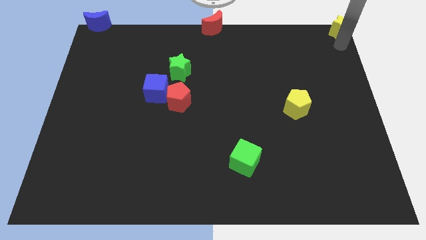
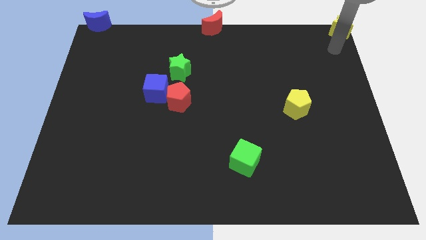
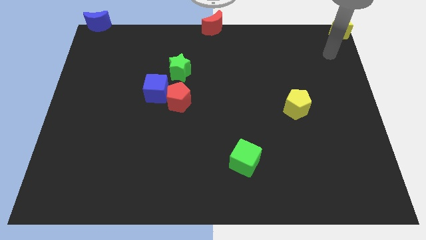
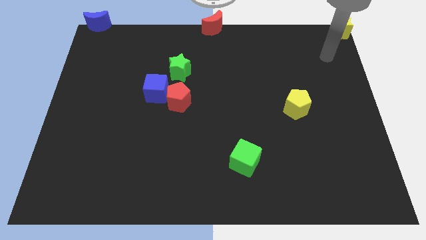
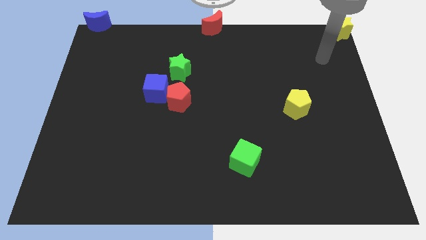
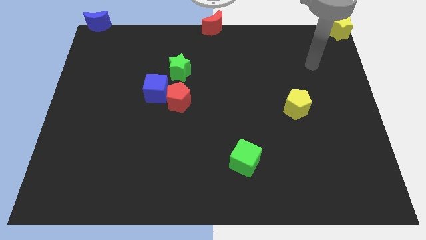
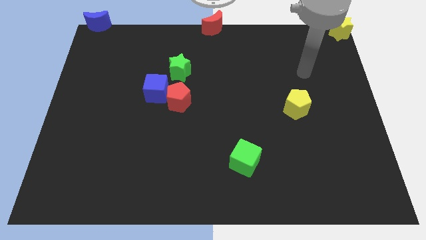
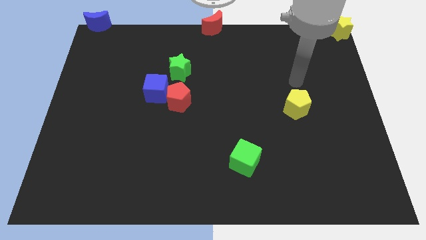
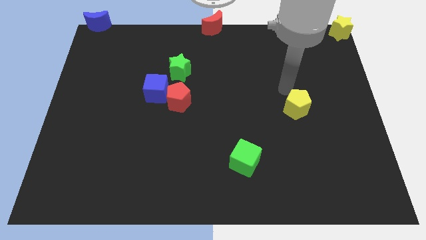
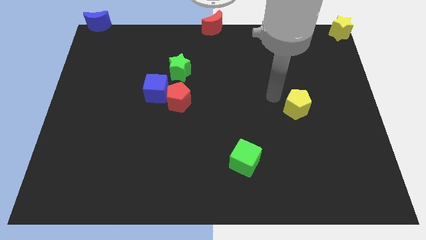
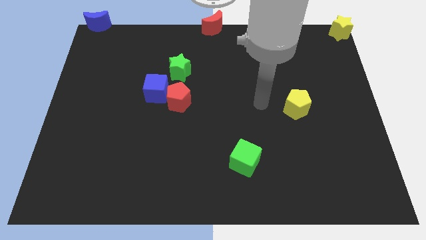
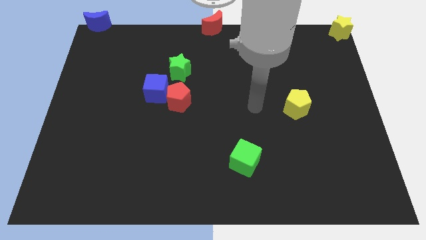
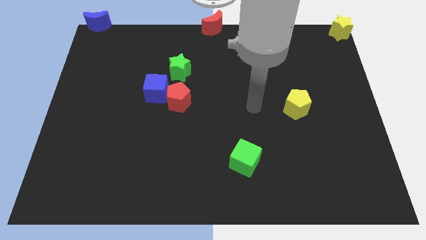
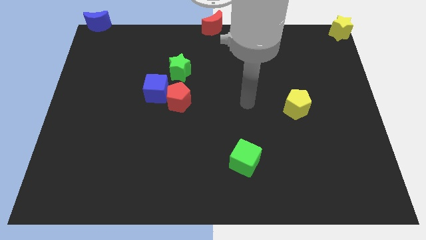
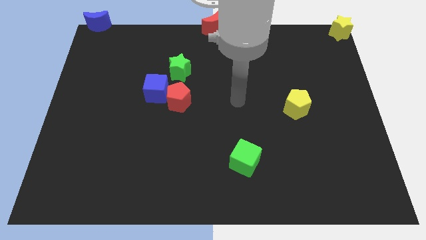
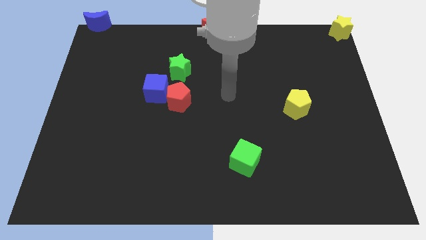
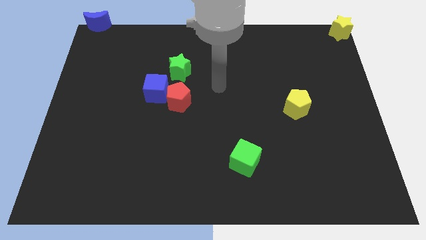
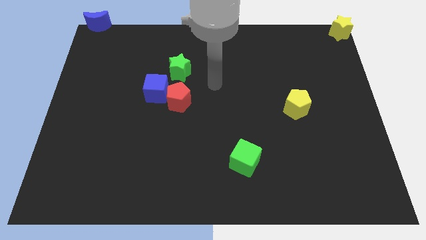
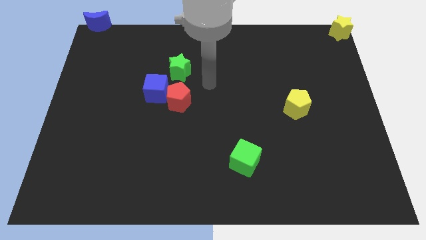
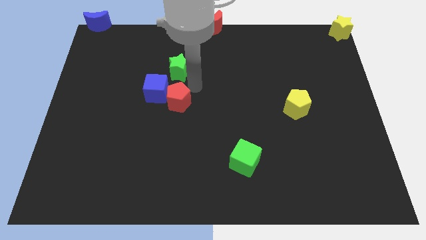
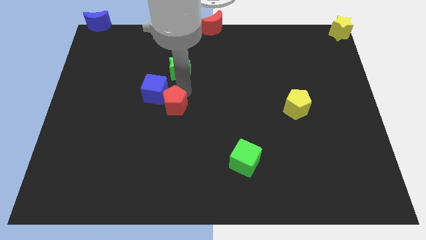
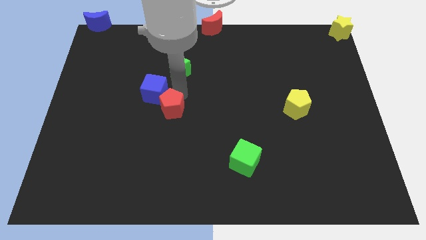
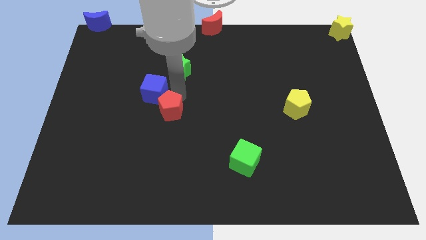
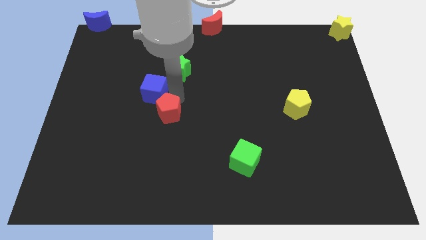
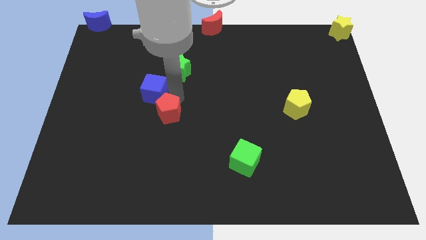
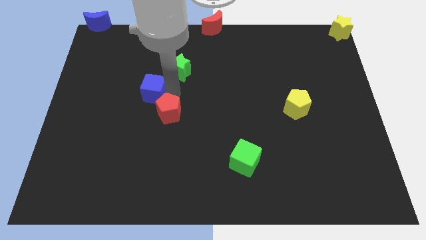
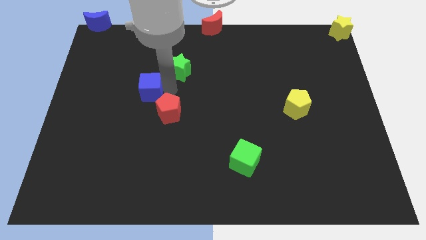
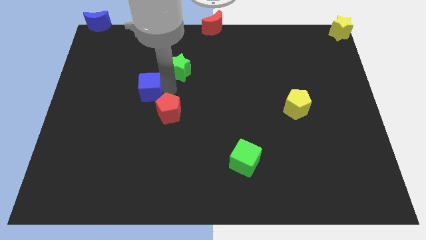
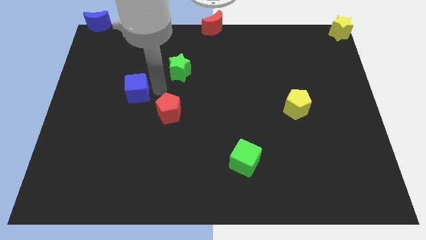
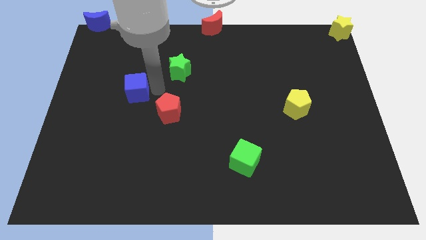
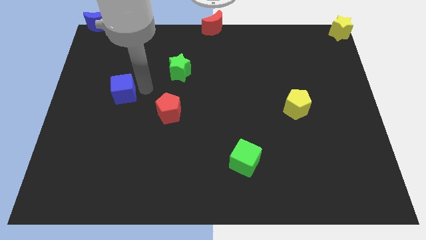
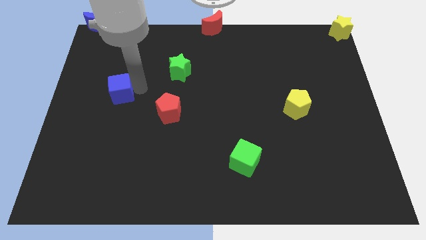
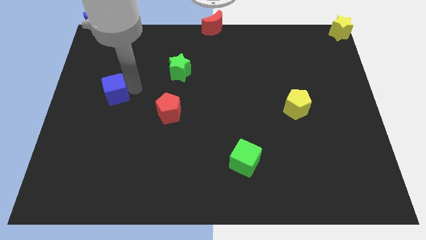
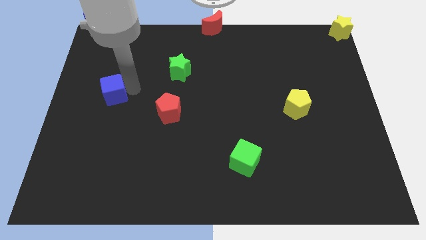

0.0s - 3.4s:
separate the red pentagon from the blue cube

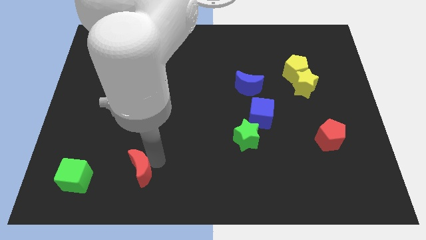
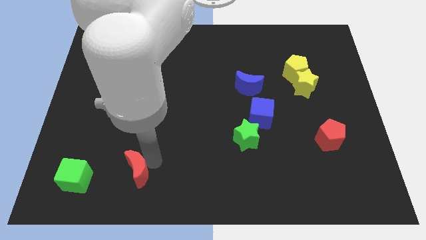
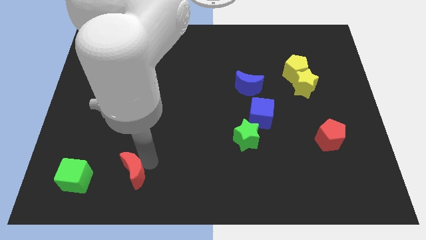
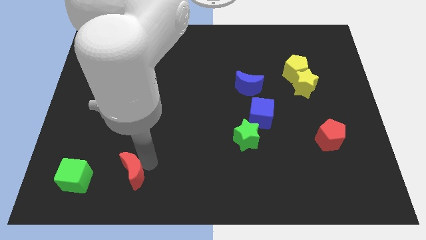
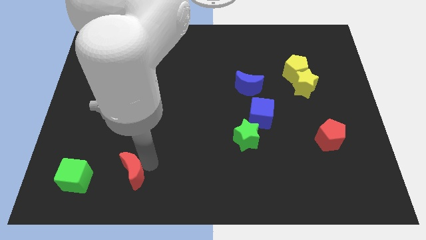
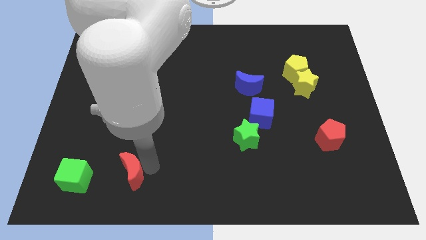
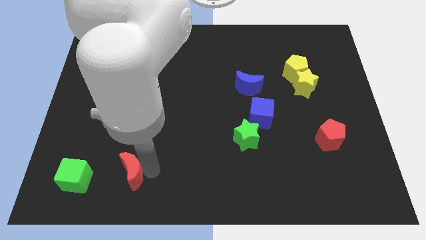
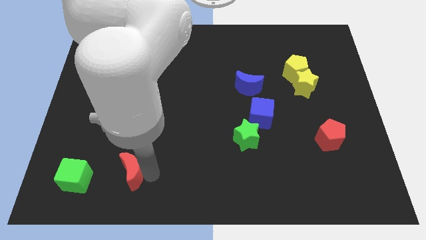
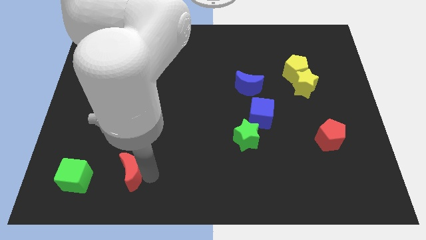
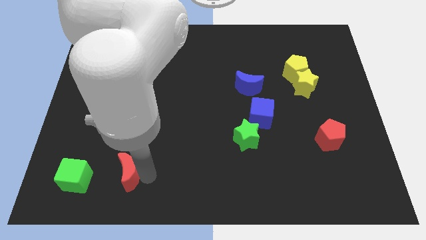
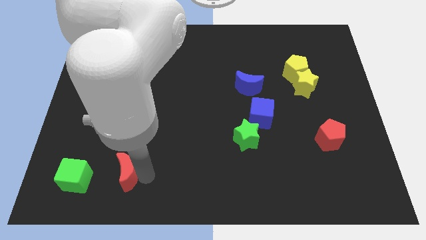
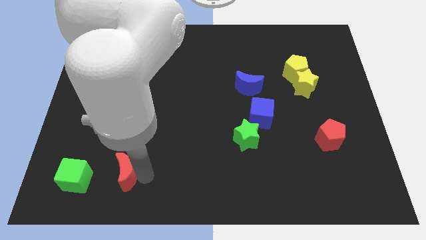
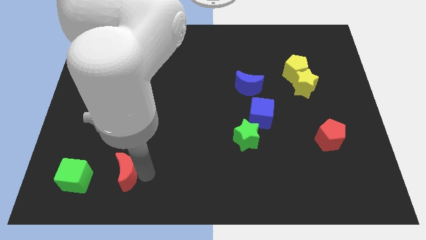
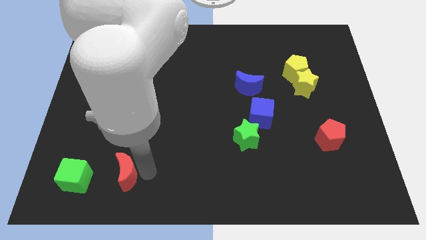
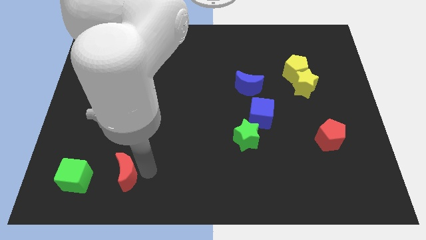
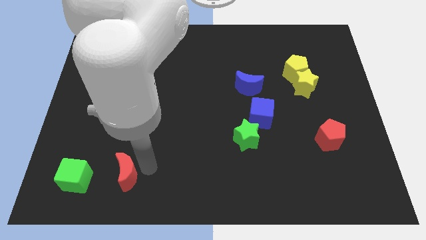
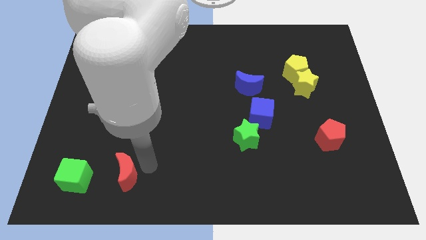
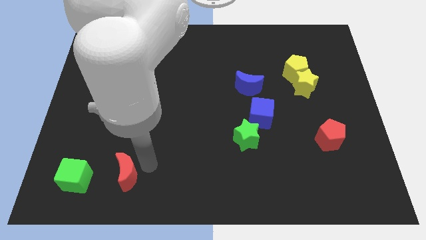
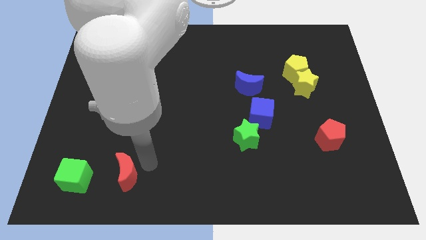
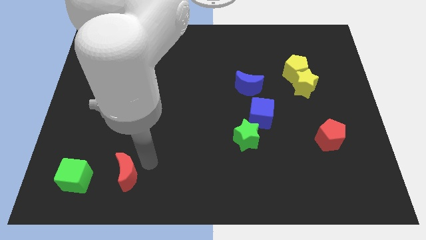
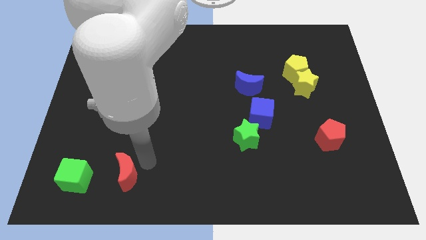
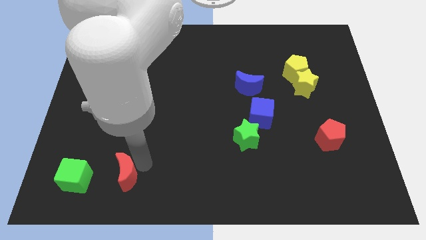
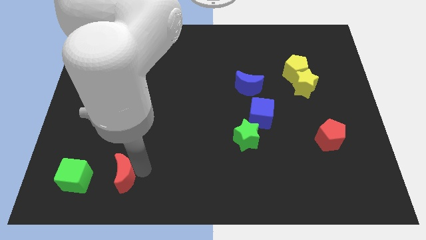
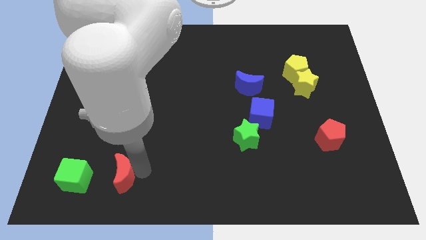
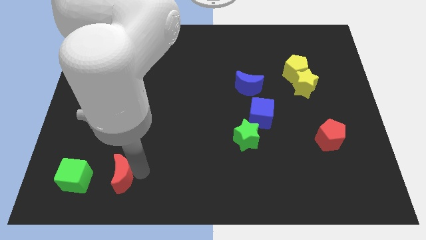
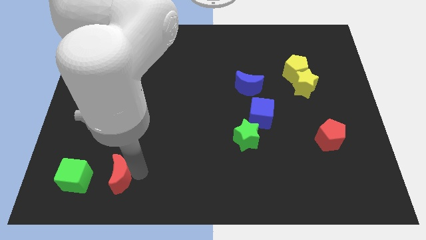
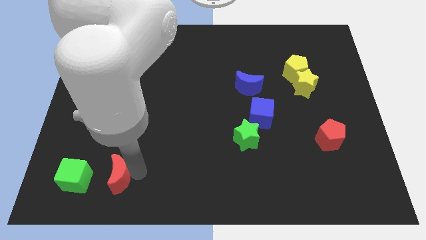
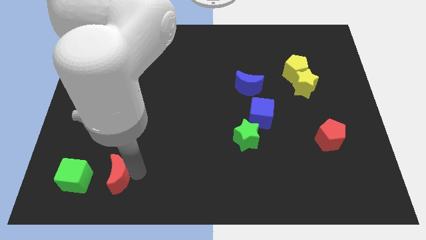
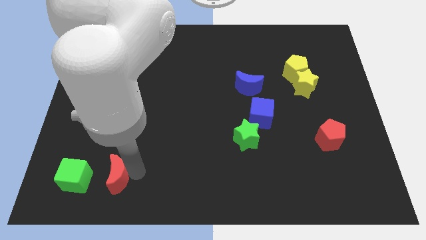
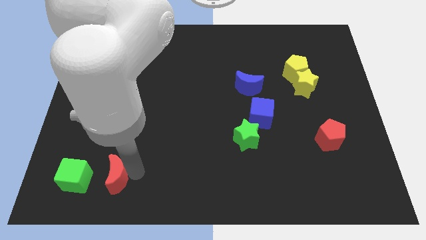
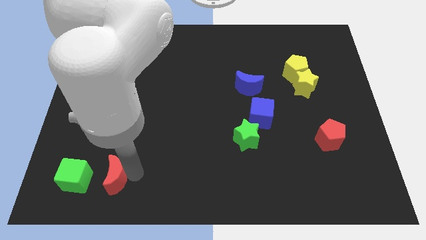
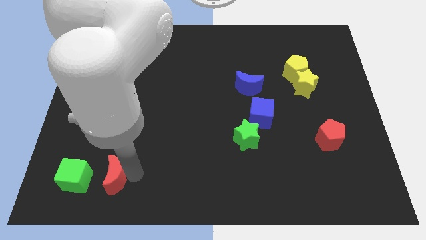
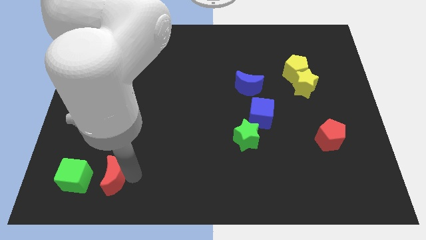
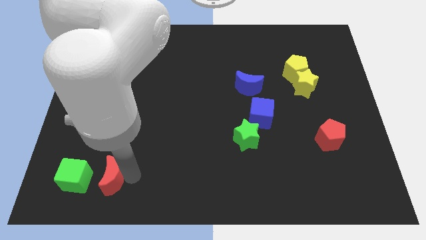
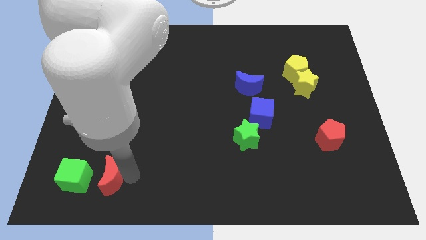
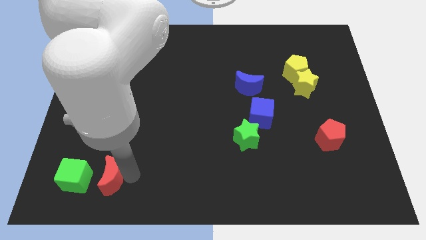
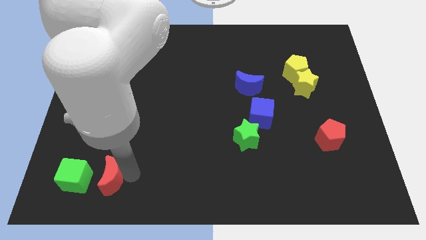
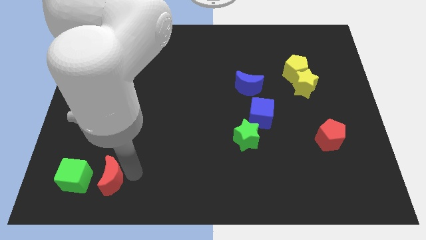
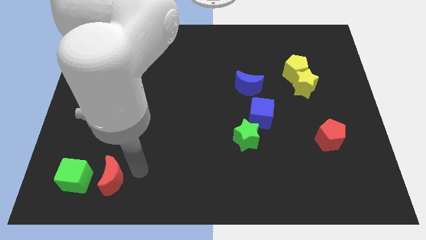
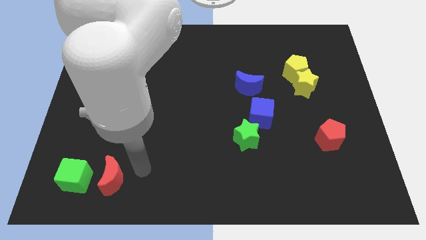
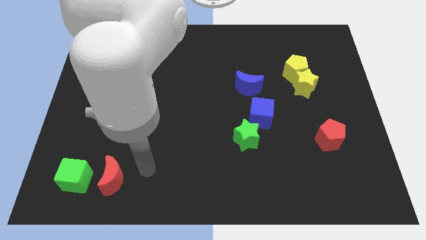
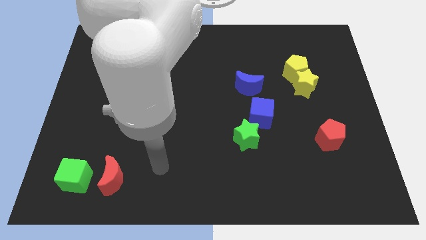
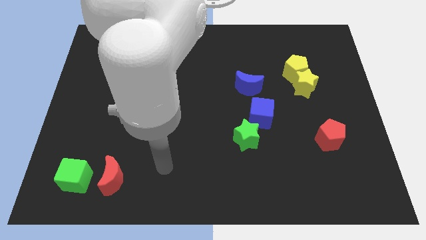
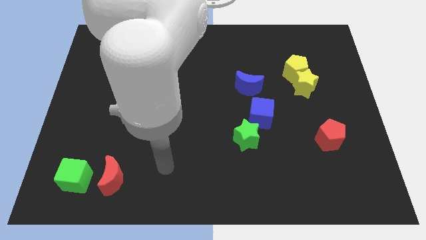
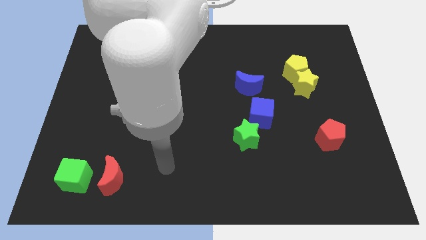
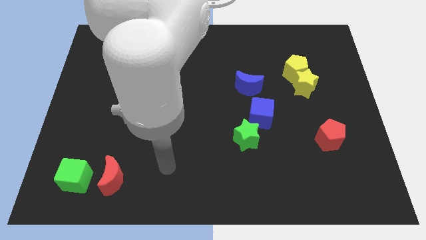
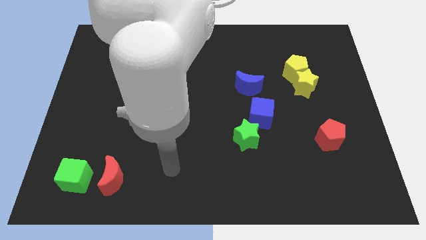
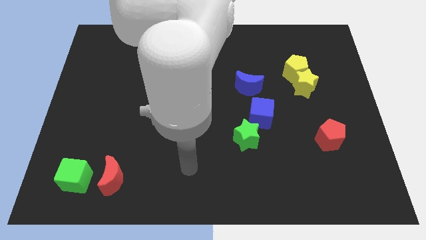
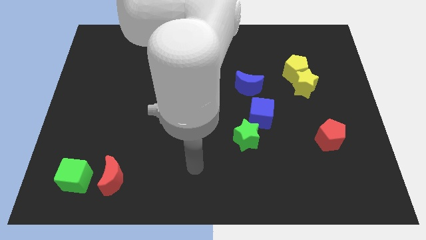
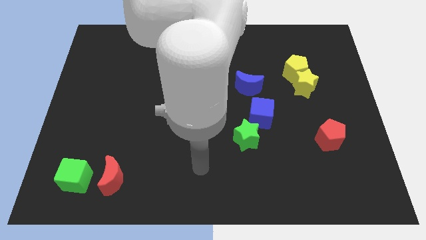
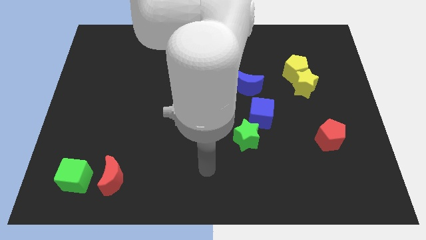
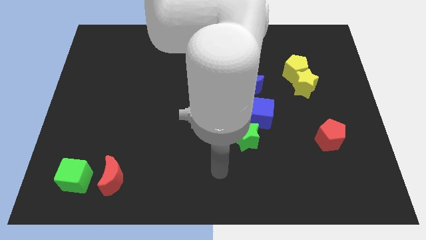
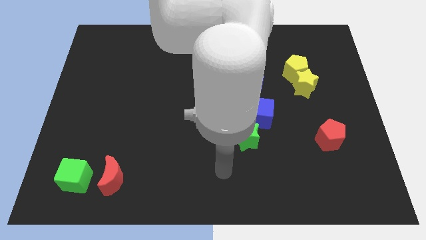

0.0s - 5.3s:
move red crescent to the right of green cube

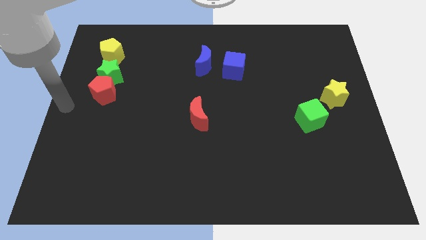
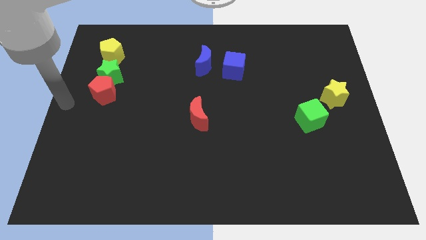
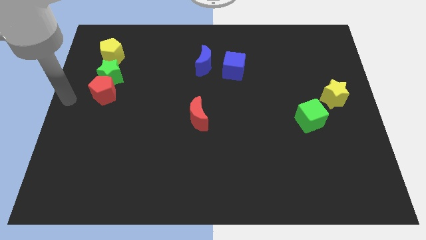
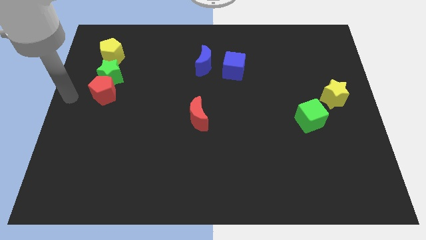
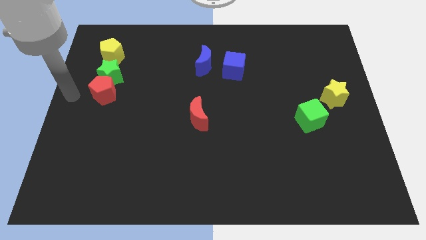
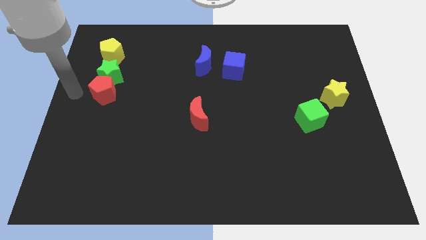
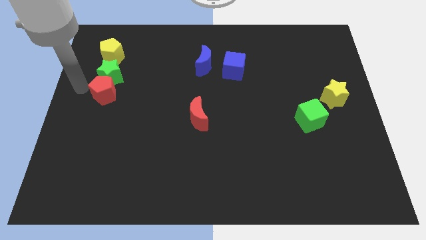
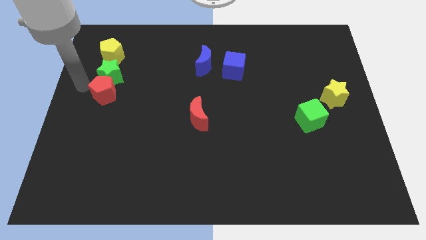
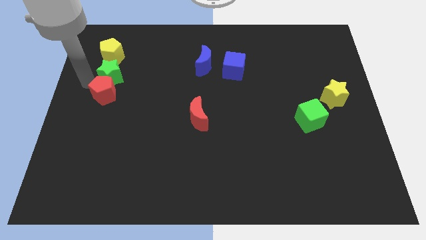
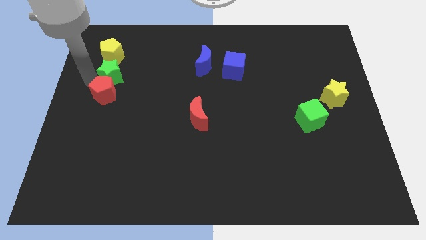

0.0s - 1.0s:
place your arm to the left side of green star
